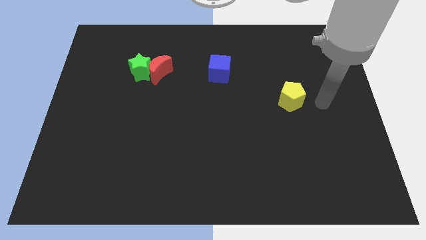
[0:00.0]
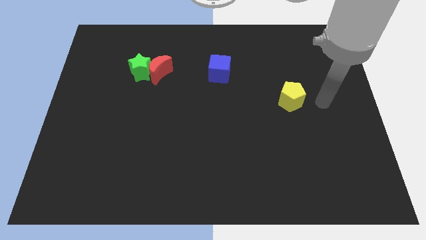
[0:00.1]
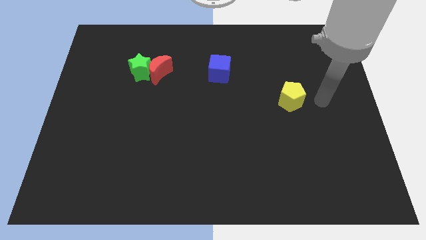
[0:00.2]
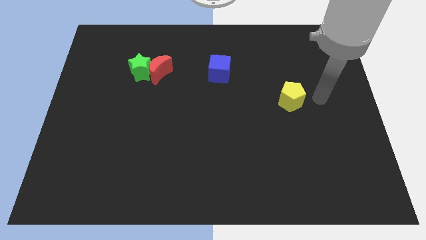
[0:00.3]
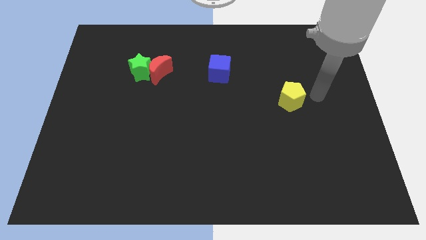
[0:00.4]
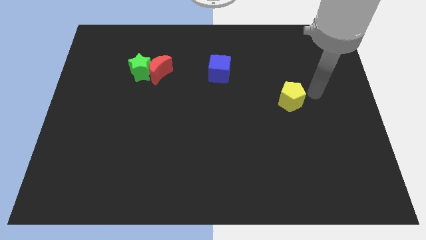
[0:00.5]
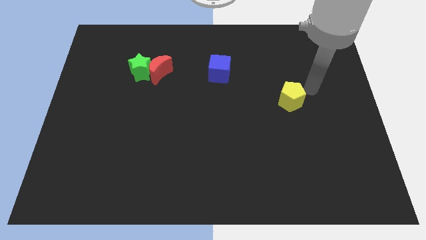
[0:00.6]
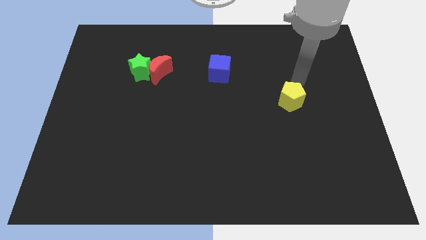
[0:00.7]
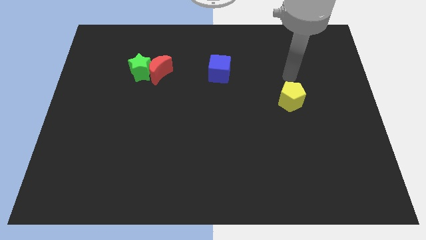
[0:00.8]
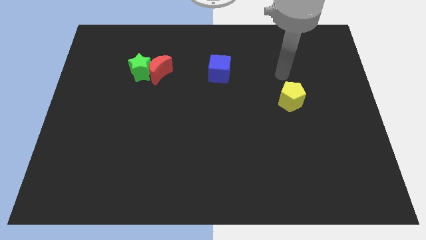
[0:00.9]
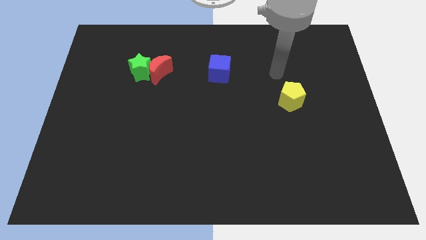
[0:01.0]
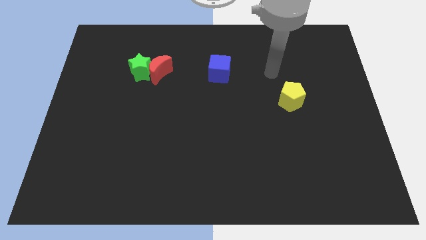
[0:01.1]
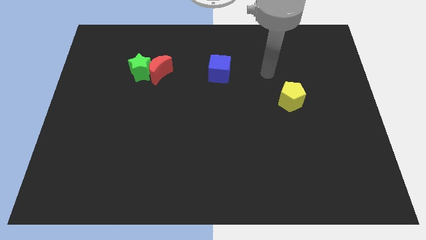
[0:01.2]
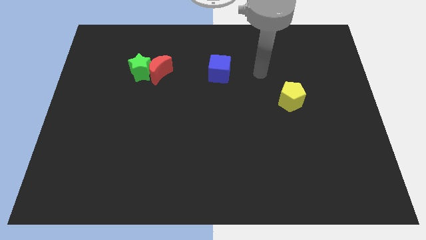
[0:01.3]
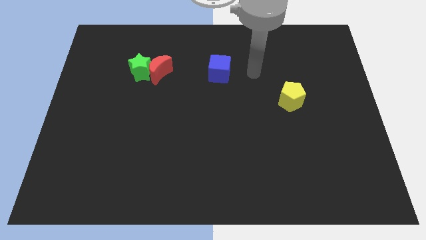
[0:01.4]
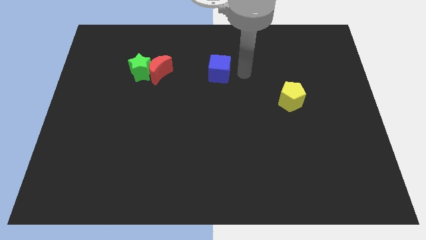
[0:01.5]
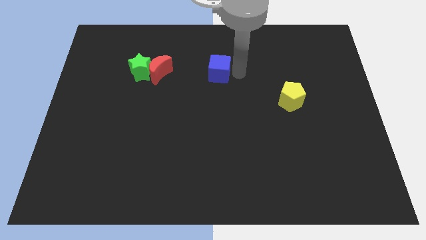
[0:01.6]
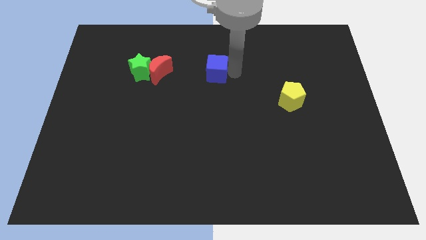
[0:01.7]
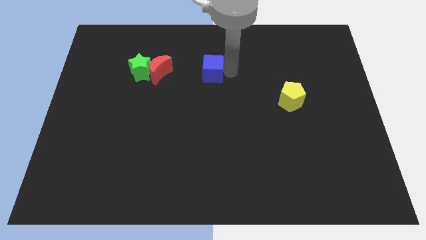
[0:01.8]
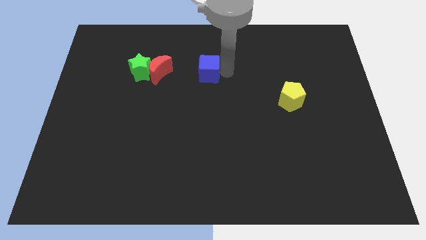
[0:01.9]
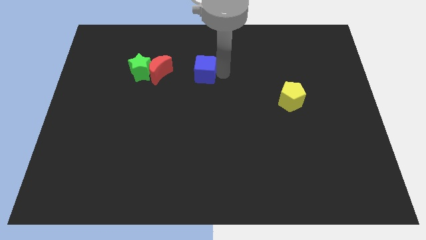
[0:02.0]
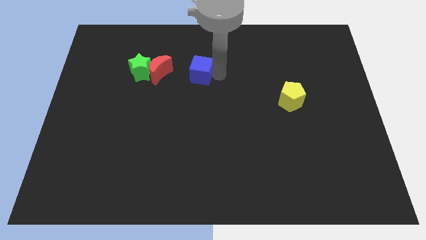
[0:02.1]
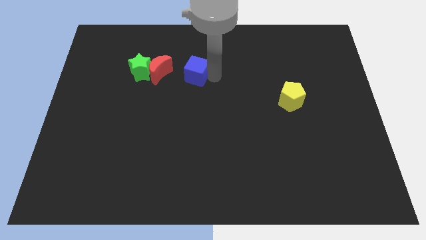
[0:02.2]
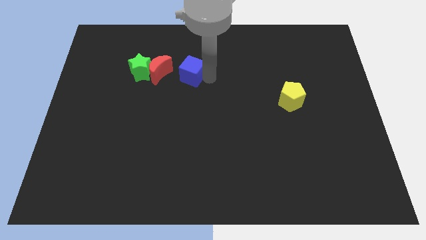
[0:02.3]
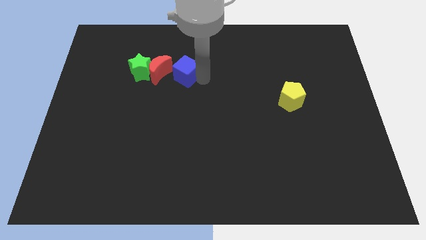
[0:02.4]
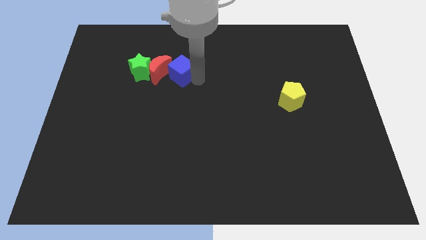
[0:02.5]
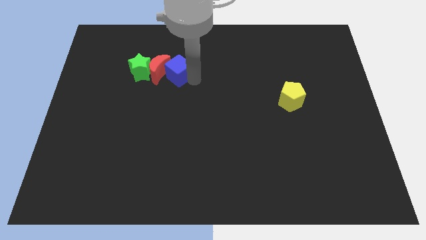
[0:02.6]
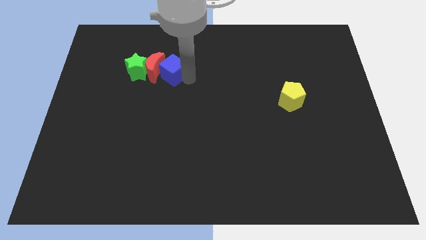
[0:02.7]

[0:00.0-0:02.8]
slide the blue cube next to the red moon

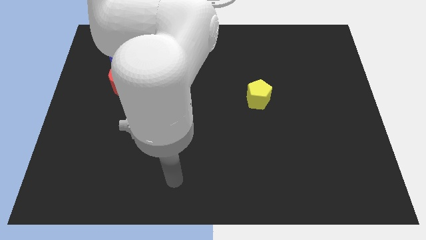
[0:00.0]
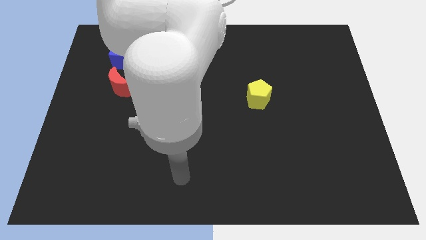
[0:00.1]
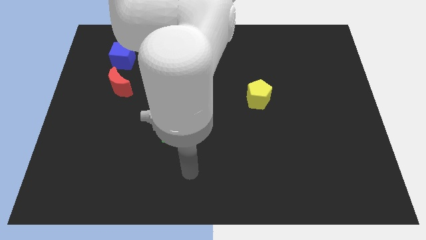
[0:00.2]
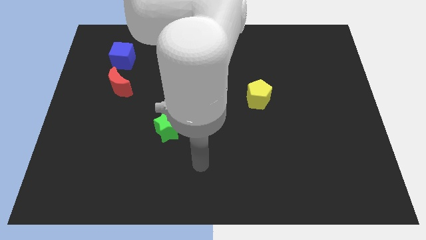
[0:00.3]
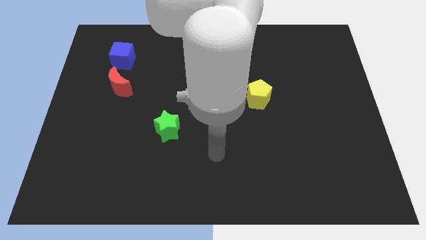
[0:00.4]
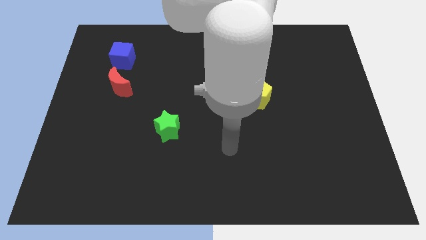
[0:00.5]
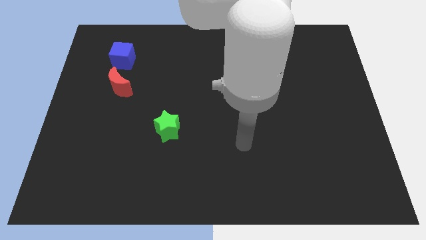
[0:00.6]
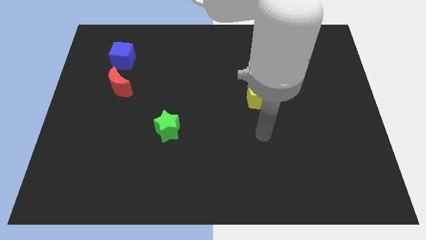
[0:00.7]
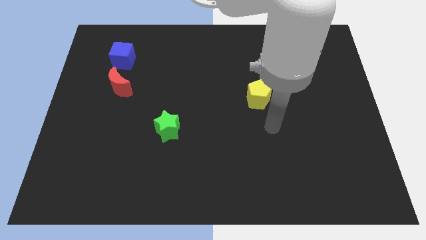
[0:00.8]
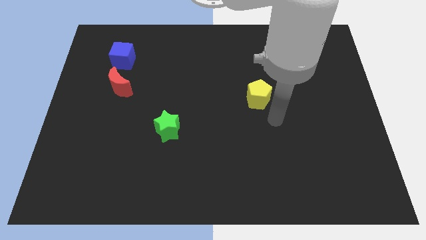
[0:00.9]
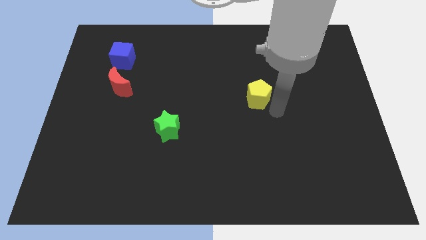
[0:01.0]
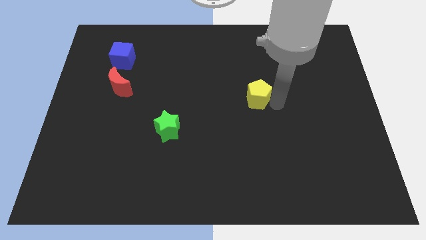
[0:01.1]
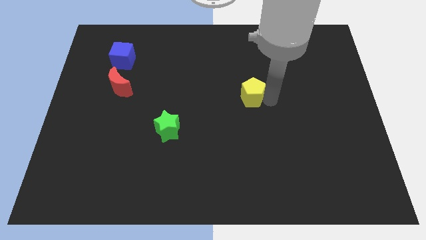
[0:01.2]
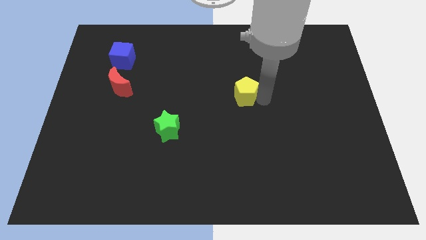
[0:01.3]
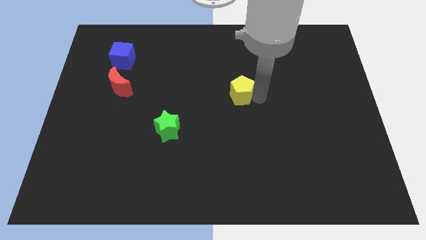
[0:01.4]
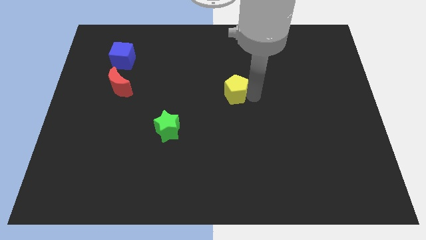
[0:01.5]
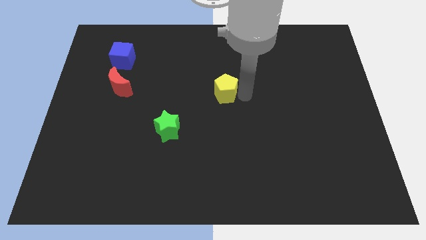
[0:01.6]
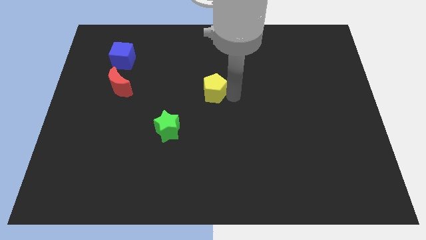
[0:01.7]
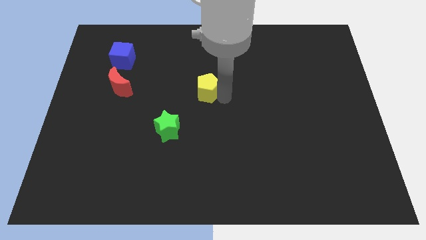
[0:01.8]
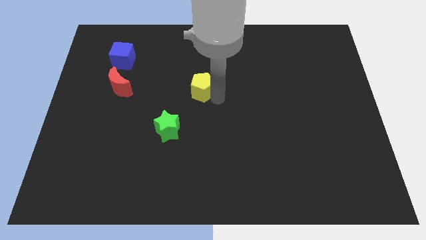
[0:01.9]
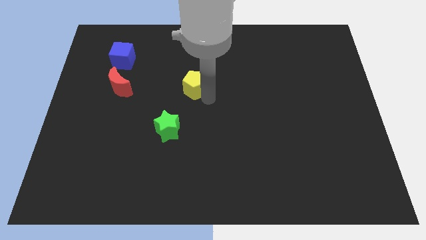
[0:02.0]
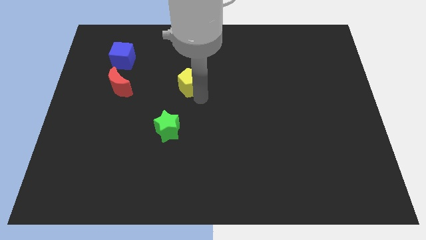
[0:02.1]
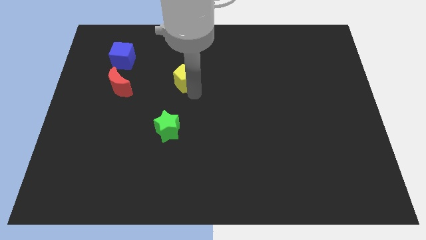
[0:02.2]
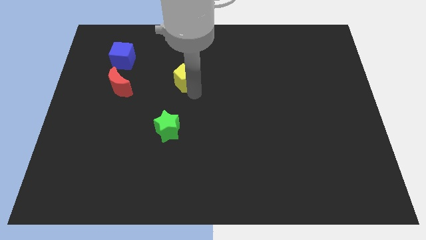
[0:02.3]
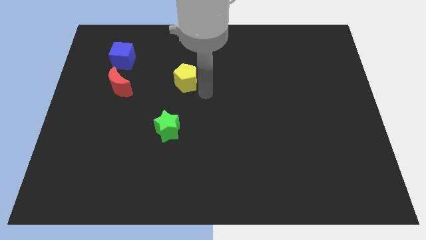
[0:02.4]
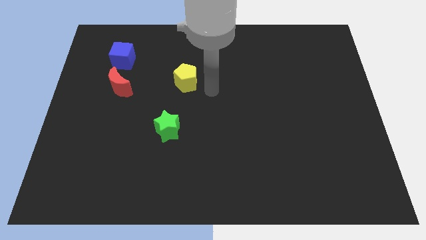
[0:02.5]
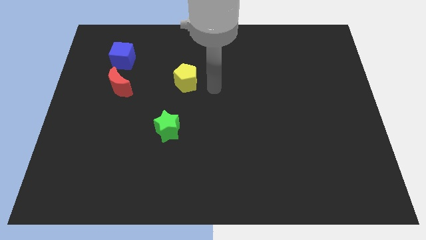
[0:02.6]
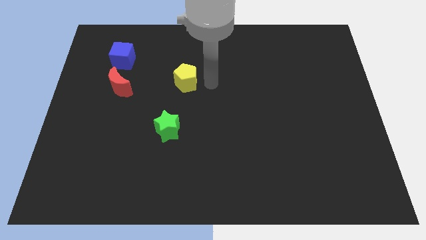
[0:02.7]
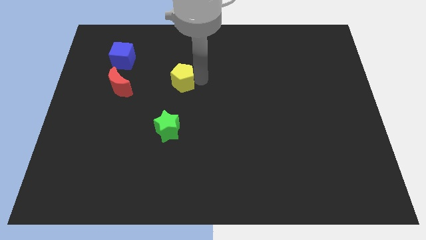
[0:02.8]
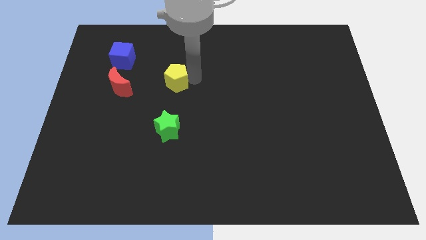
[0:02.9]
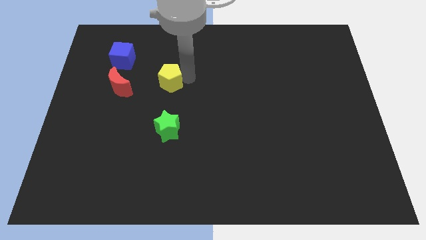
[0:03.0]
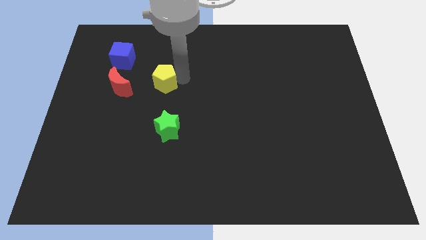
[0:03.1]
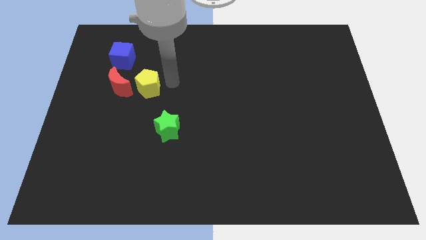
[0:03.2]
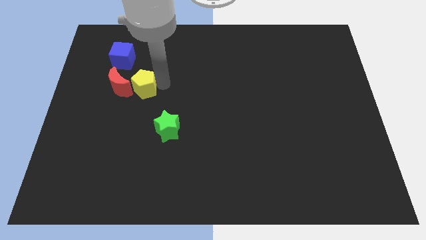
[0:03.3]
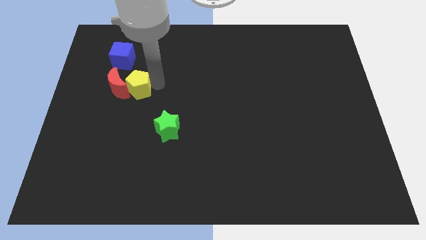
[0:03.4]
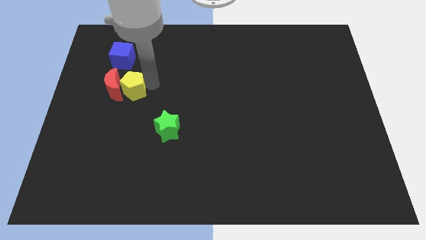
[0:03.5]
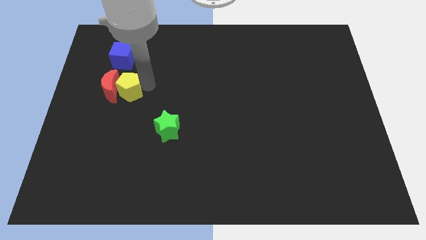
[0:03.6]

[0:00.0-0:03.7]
move the pentagon close to the moon

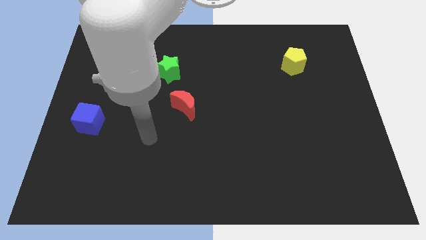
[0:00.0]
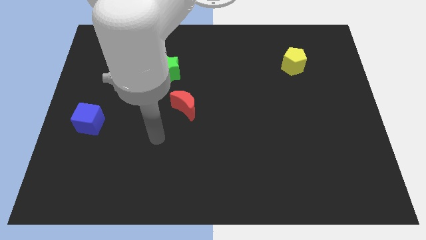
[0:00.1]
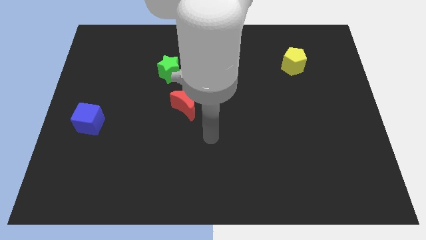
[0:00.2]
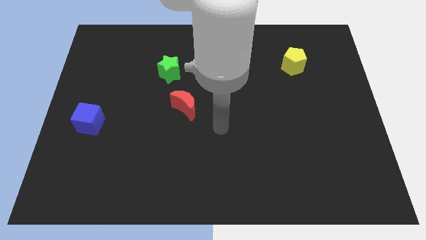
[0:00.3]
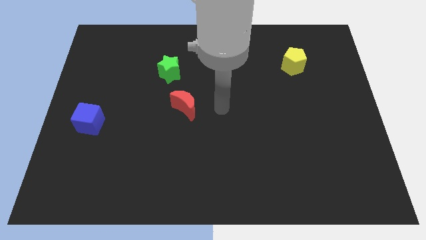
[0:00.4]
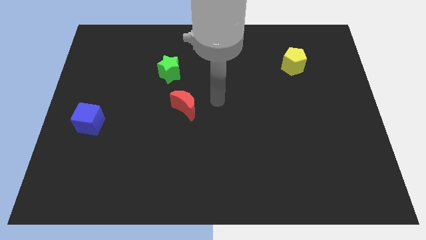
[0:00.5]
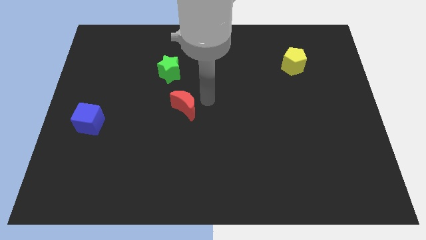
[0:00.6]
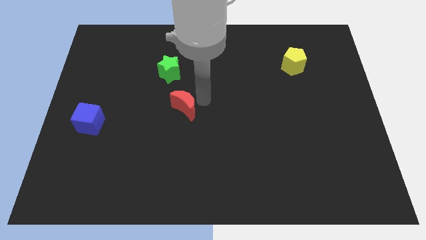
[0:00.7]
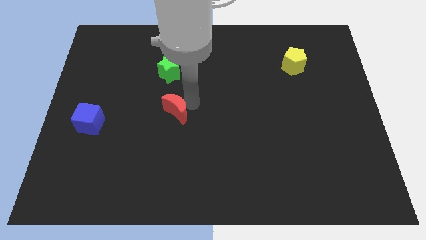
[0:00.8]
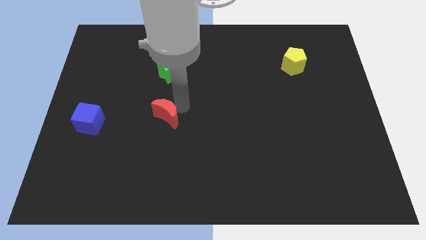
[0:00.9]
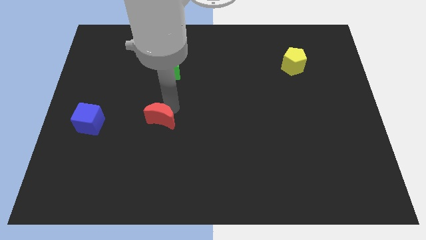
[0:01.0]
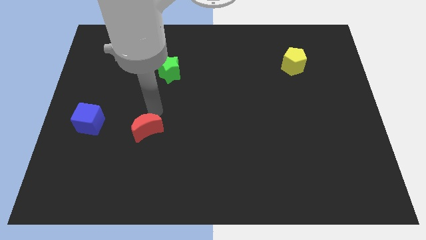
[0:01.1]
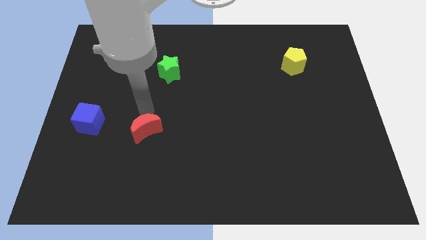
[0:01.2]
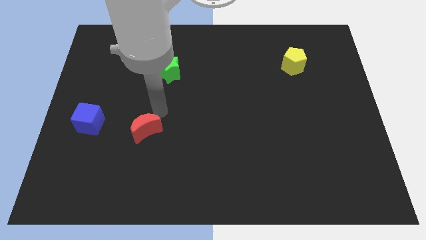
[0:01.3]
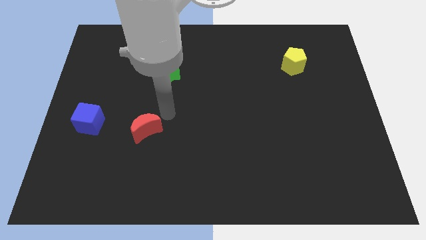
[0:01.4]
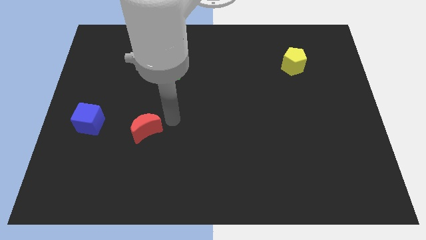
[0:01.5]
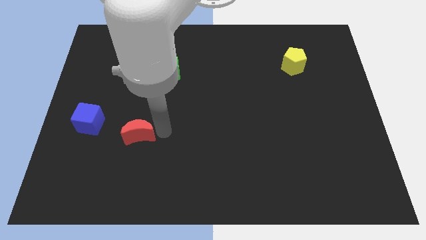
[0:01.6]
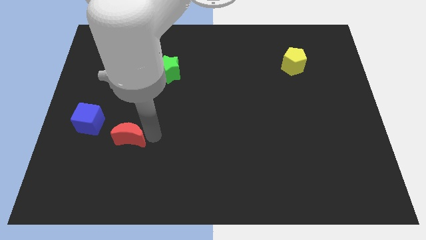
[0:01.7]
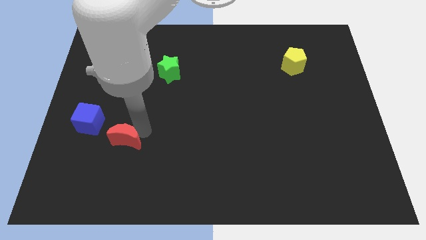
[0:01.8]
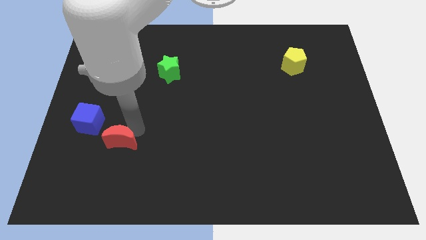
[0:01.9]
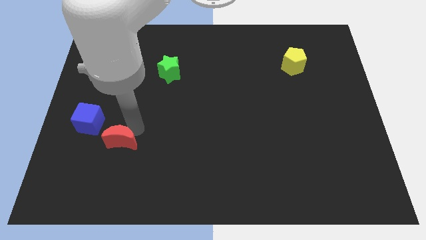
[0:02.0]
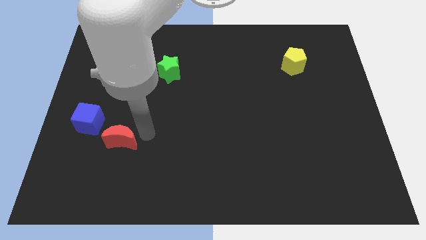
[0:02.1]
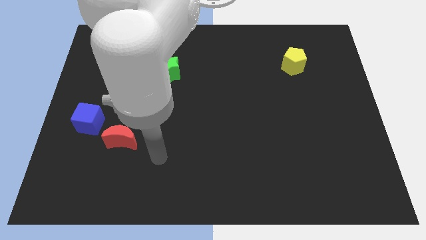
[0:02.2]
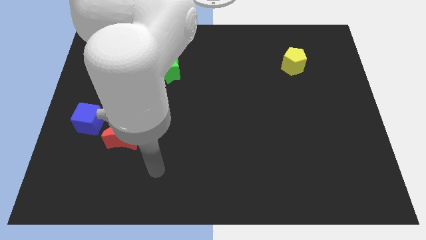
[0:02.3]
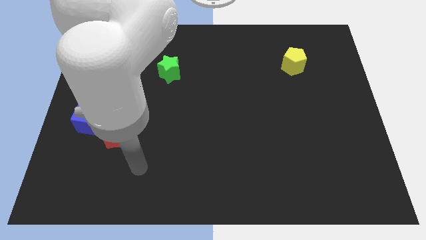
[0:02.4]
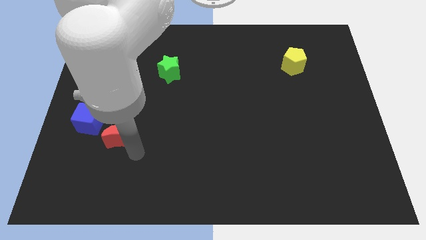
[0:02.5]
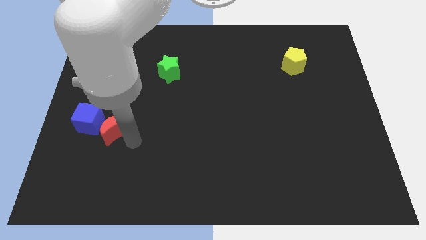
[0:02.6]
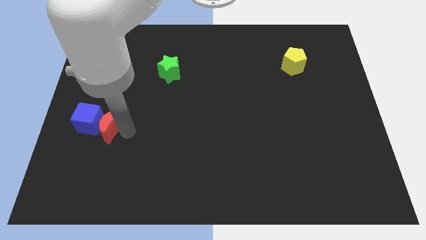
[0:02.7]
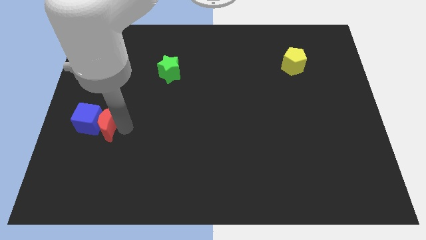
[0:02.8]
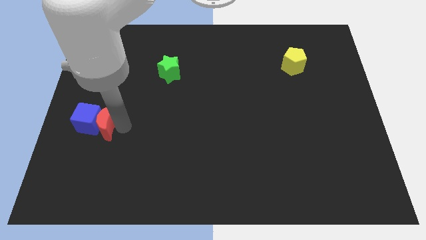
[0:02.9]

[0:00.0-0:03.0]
put the red moon towards the blue cube
